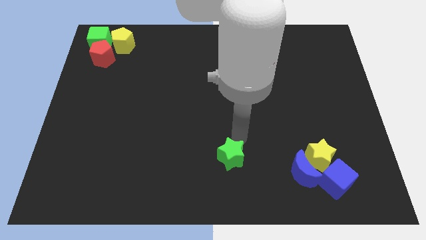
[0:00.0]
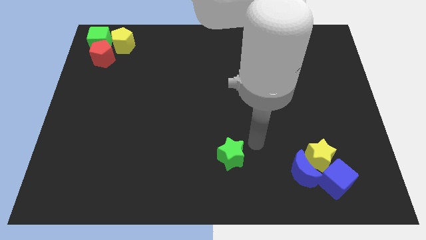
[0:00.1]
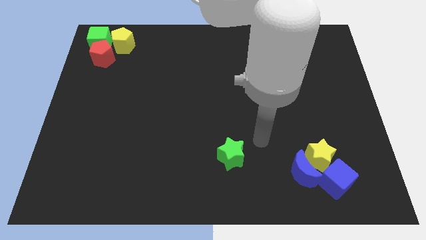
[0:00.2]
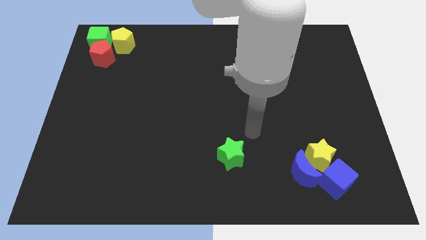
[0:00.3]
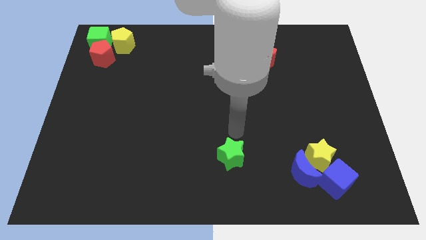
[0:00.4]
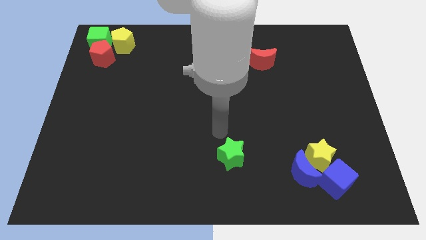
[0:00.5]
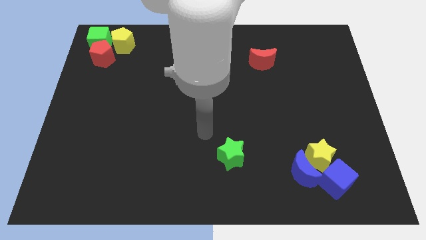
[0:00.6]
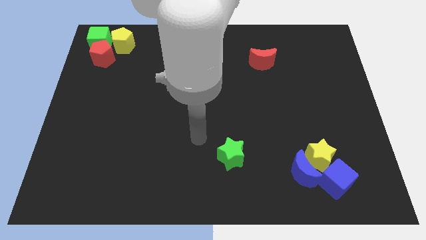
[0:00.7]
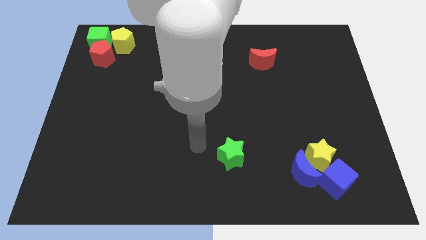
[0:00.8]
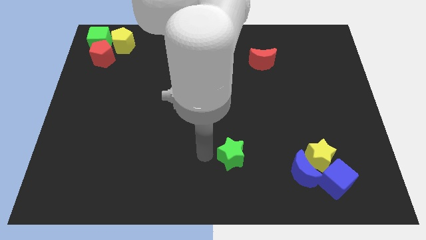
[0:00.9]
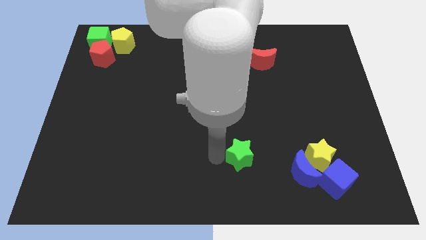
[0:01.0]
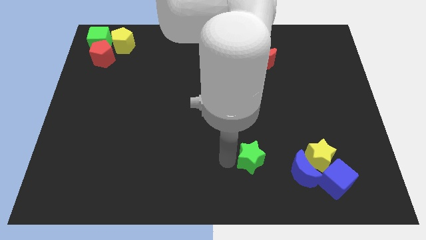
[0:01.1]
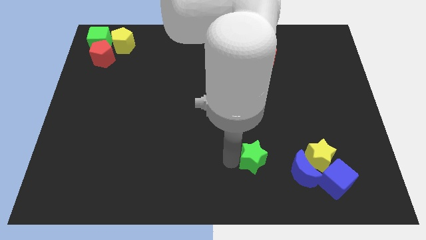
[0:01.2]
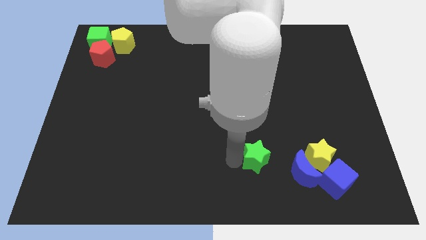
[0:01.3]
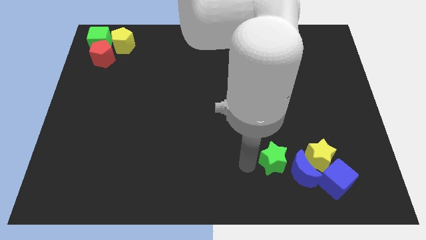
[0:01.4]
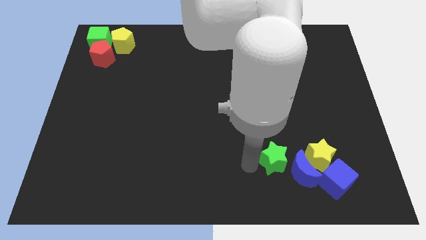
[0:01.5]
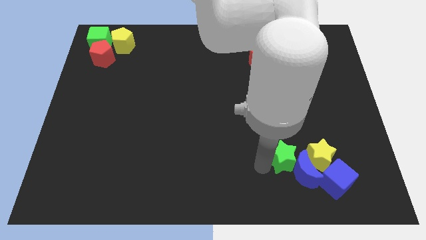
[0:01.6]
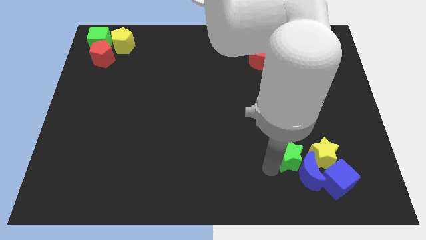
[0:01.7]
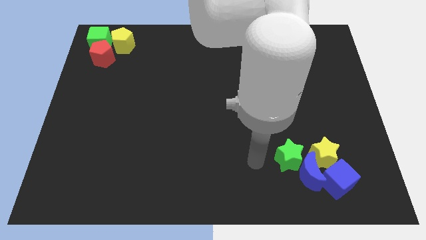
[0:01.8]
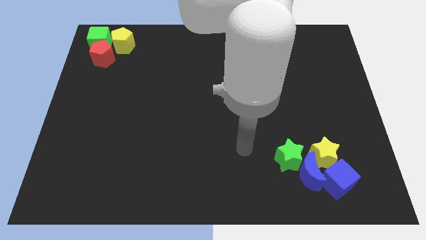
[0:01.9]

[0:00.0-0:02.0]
place the green star left to the blue crescent

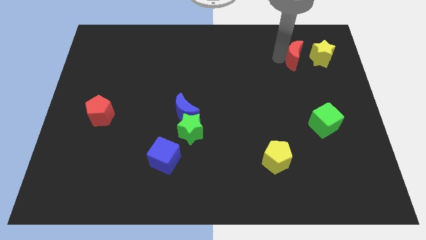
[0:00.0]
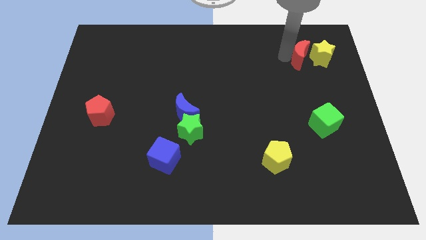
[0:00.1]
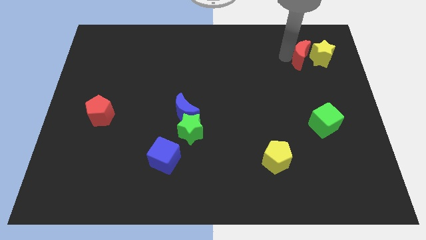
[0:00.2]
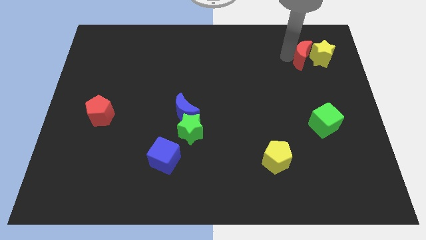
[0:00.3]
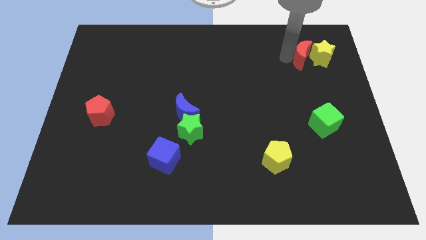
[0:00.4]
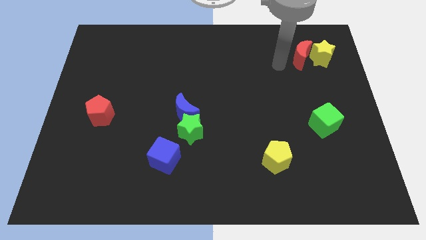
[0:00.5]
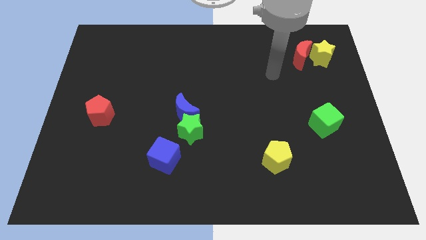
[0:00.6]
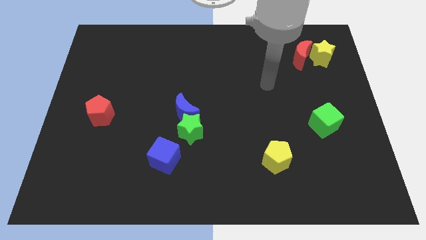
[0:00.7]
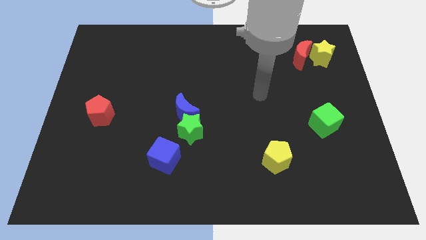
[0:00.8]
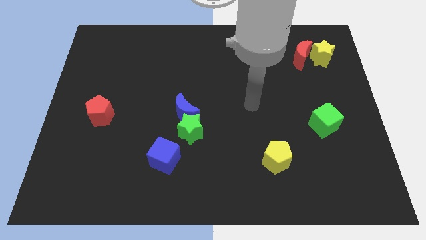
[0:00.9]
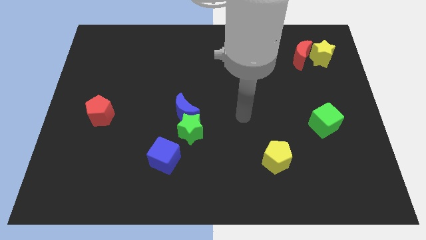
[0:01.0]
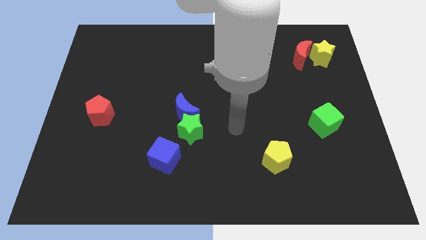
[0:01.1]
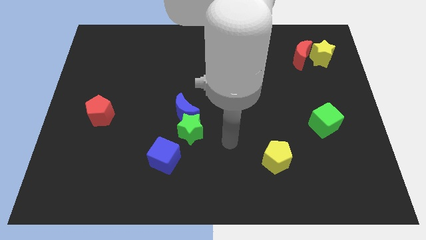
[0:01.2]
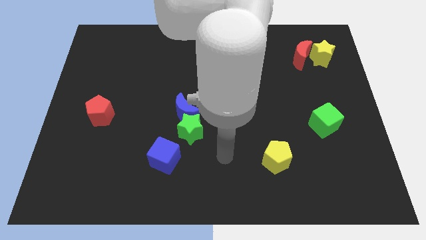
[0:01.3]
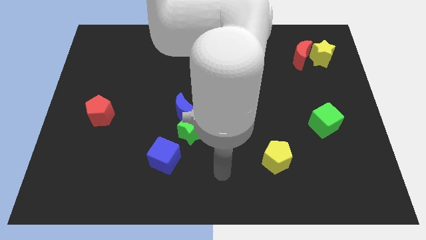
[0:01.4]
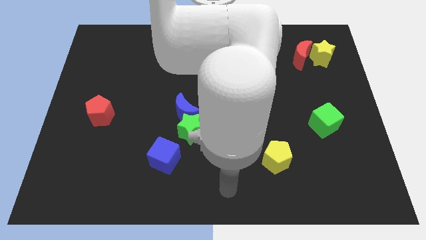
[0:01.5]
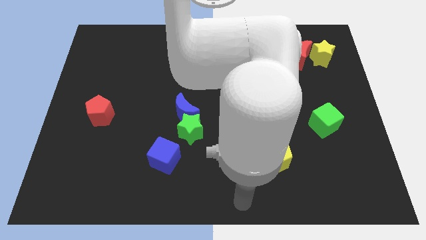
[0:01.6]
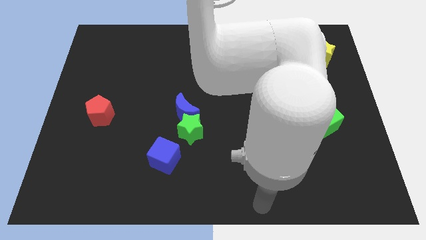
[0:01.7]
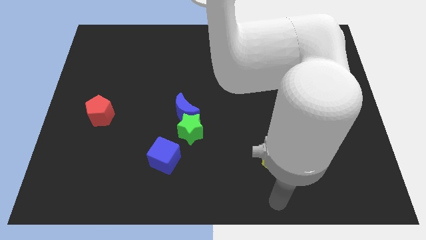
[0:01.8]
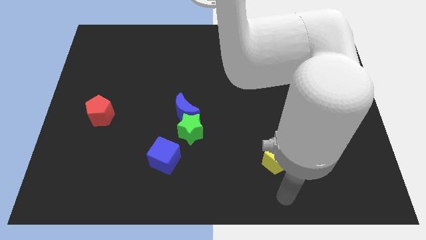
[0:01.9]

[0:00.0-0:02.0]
move the arm below the yellow pentagon

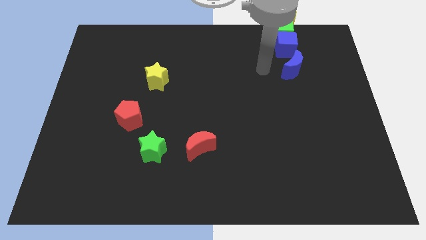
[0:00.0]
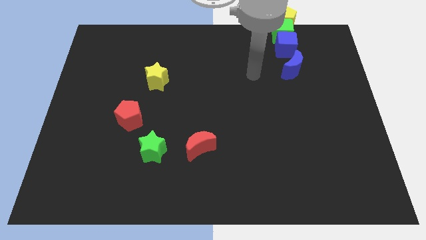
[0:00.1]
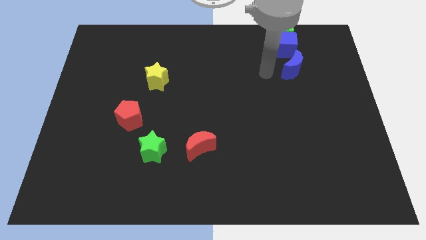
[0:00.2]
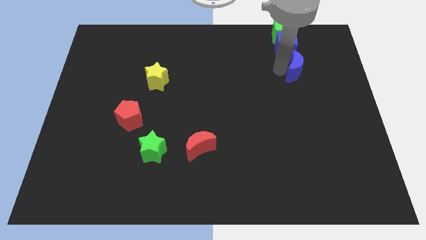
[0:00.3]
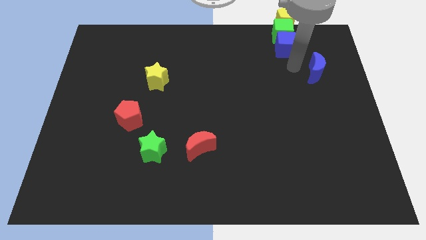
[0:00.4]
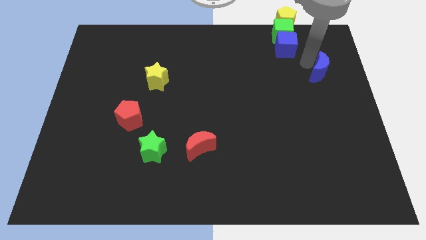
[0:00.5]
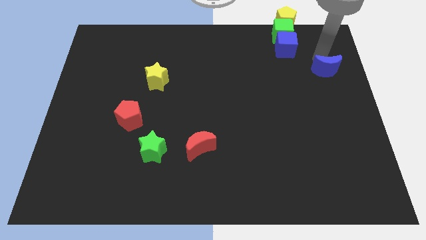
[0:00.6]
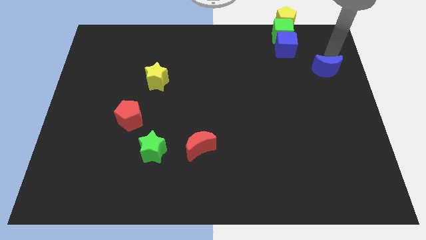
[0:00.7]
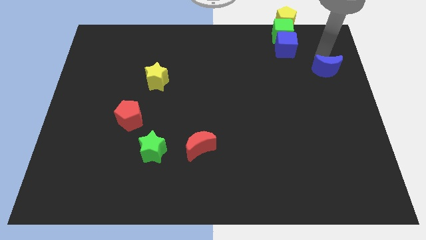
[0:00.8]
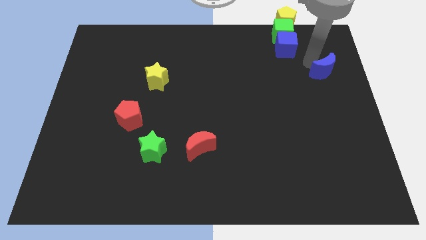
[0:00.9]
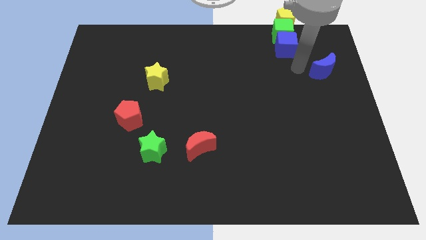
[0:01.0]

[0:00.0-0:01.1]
move the blue crescent away from the blue cube

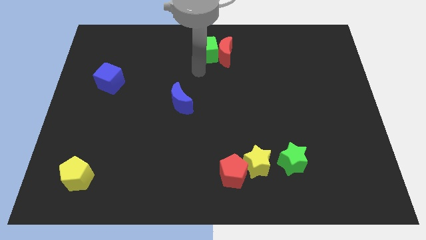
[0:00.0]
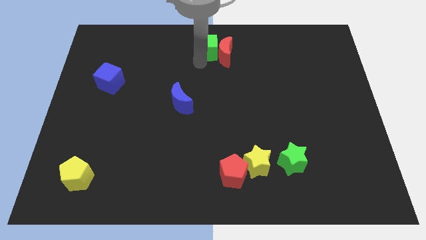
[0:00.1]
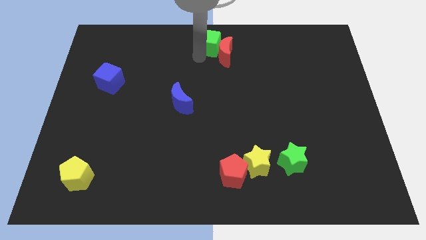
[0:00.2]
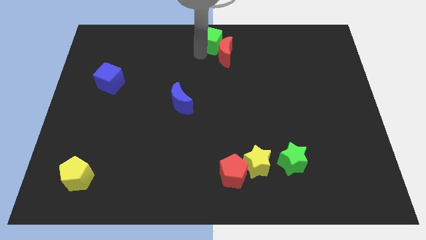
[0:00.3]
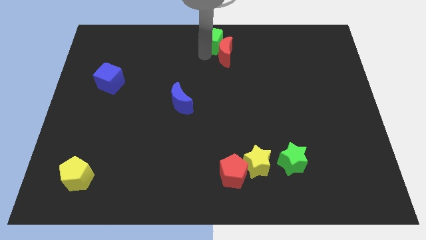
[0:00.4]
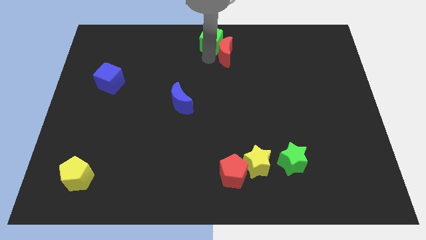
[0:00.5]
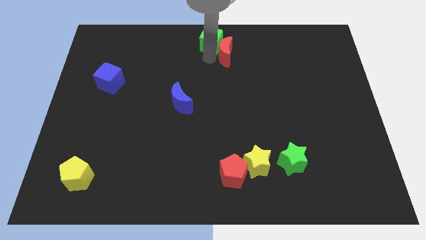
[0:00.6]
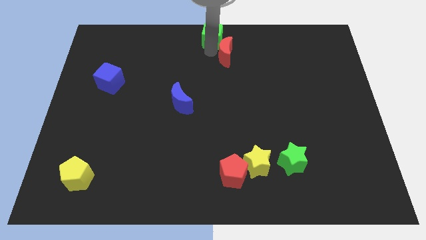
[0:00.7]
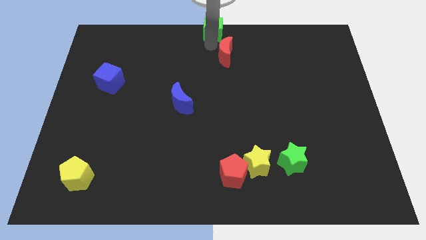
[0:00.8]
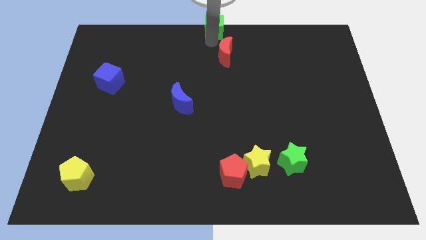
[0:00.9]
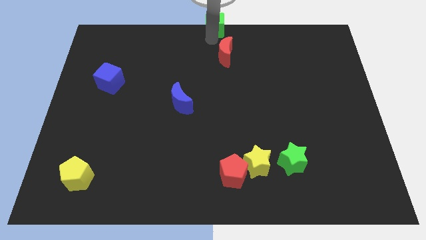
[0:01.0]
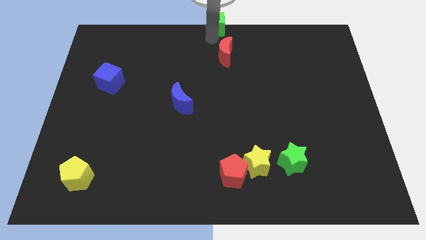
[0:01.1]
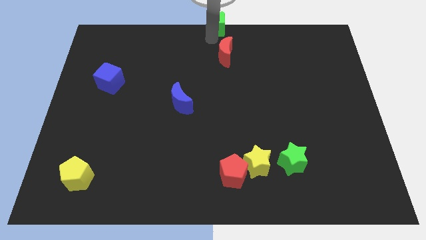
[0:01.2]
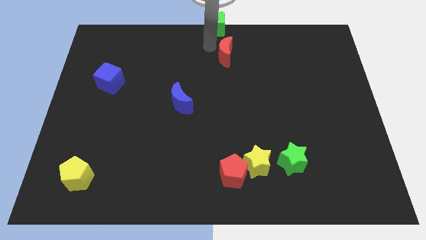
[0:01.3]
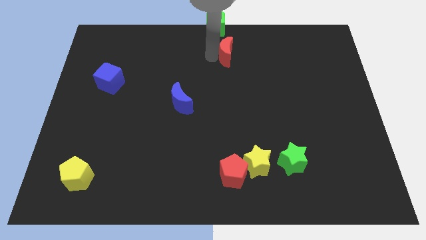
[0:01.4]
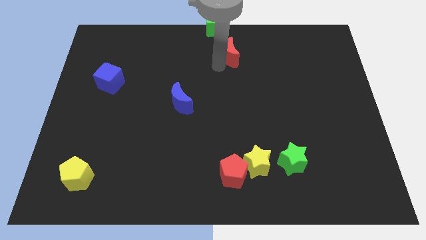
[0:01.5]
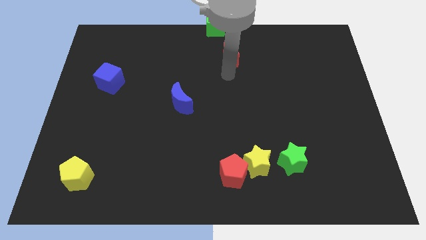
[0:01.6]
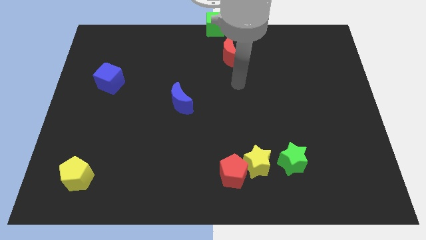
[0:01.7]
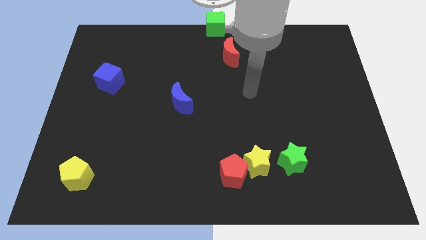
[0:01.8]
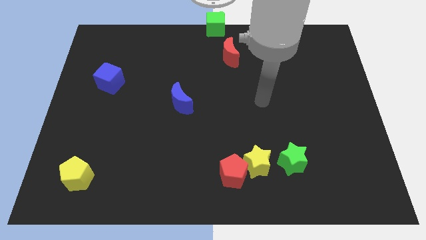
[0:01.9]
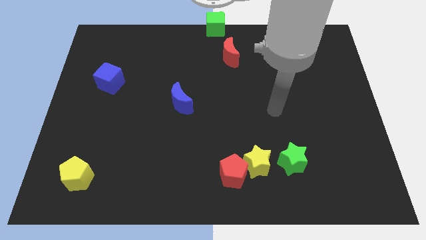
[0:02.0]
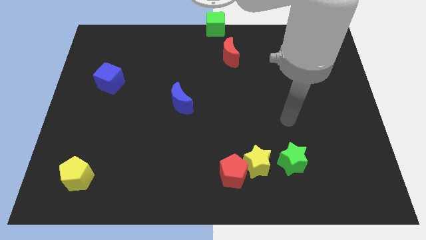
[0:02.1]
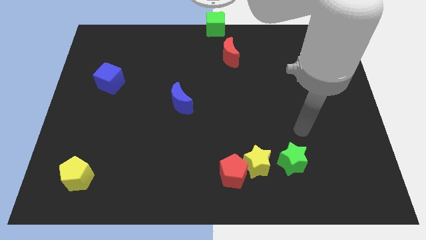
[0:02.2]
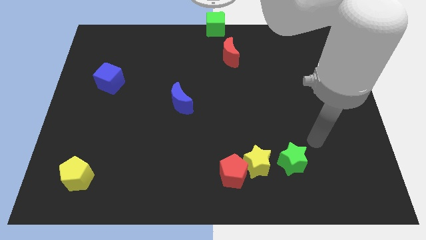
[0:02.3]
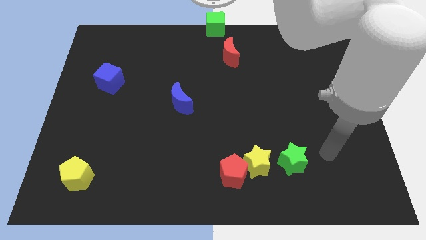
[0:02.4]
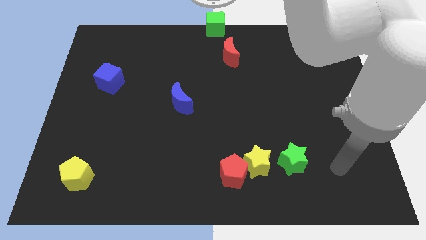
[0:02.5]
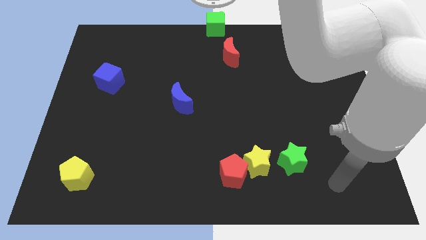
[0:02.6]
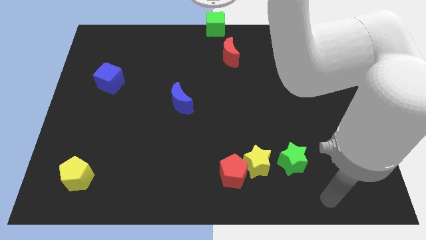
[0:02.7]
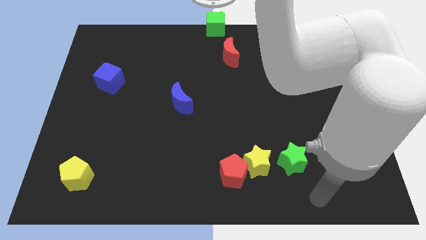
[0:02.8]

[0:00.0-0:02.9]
place the green cube at the top center of the board

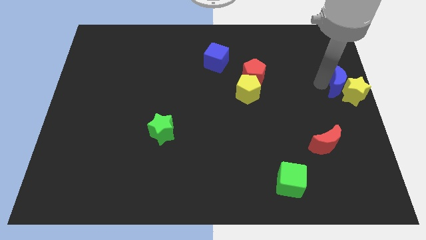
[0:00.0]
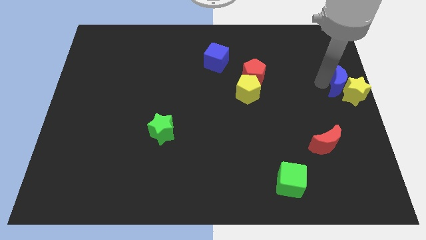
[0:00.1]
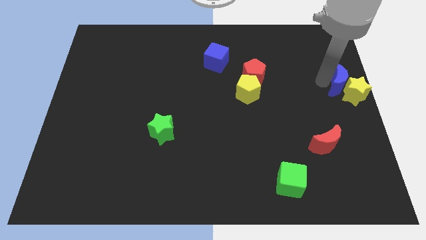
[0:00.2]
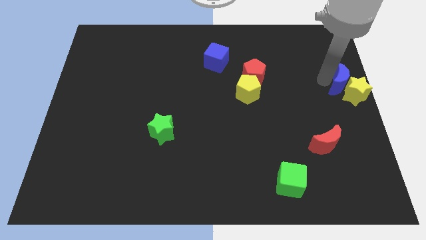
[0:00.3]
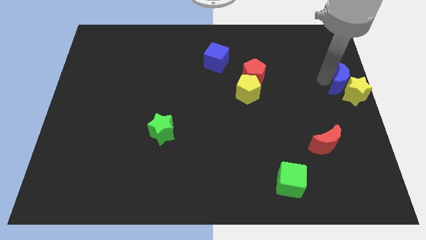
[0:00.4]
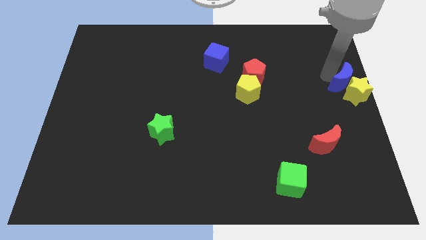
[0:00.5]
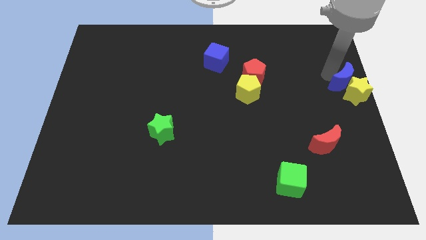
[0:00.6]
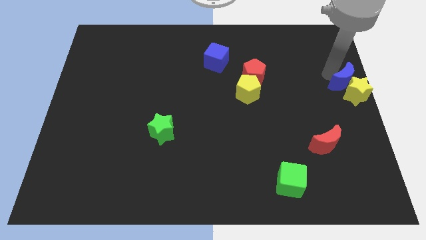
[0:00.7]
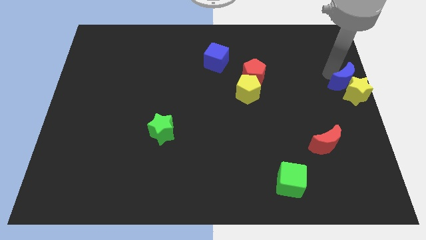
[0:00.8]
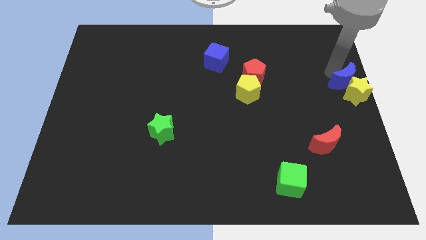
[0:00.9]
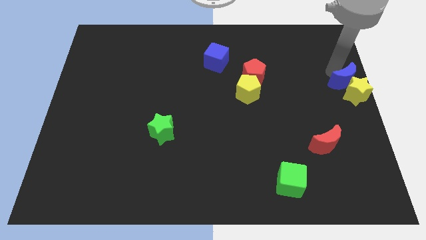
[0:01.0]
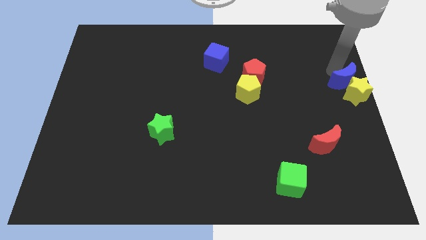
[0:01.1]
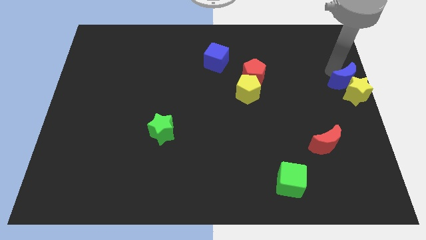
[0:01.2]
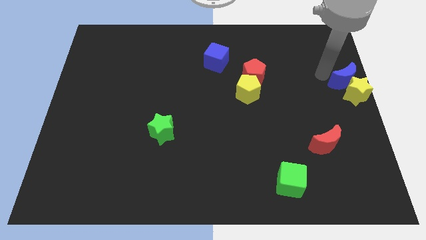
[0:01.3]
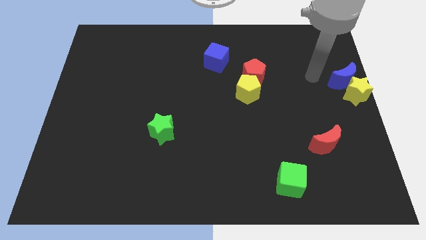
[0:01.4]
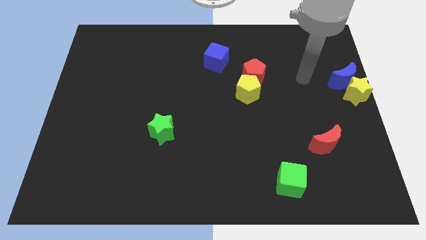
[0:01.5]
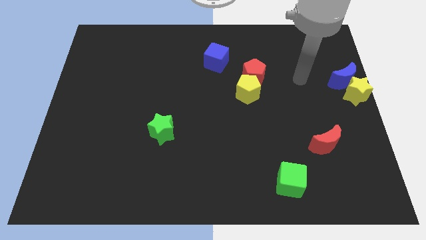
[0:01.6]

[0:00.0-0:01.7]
push the blue moon to the top side of the yellow star
